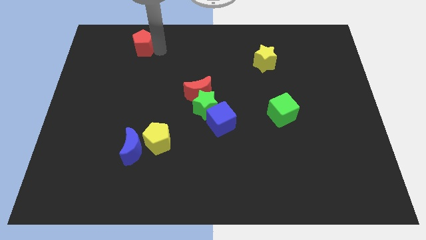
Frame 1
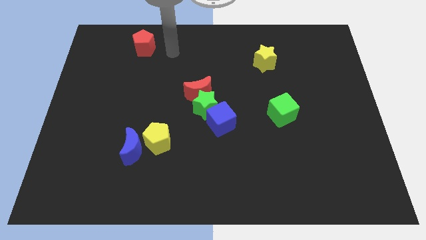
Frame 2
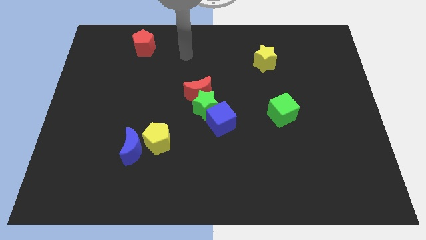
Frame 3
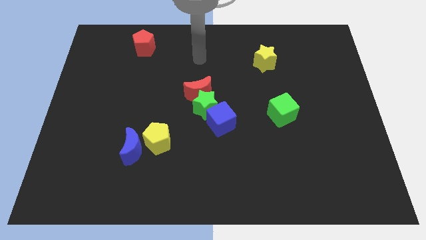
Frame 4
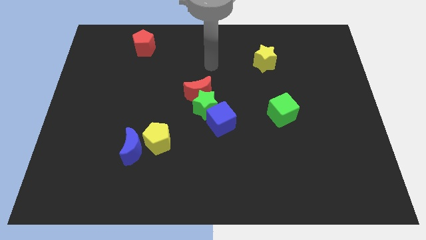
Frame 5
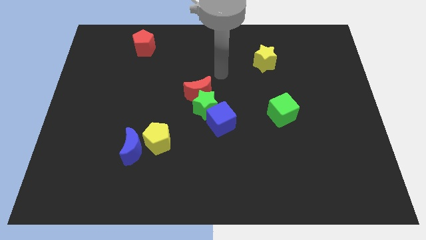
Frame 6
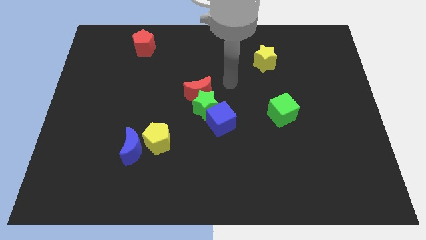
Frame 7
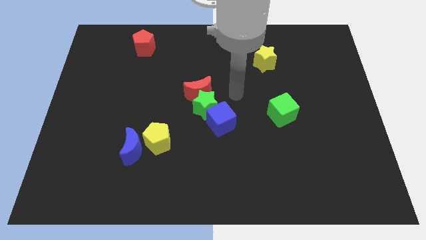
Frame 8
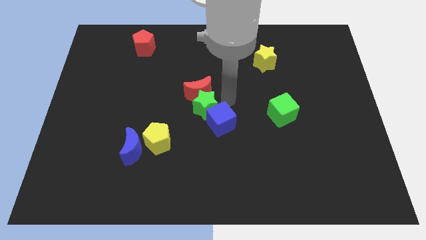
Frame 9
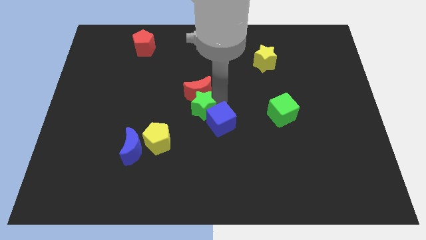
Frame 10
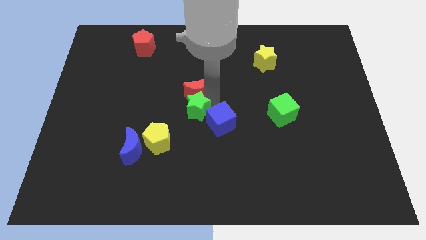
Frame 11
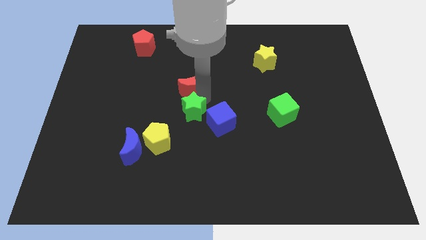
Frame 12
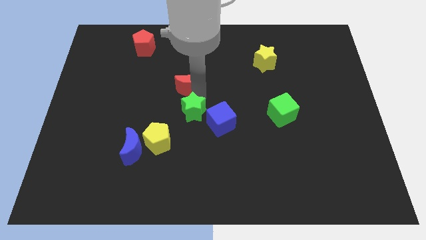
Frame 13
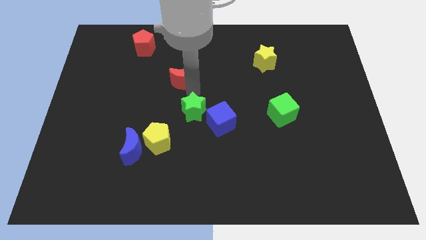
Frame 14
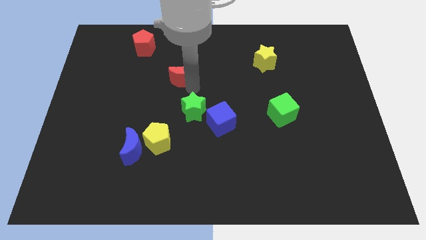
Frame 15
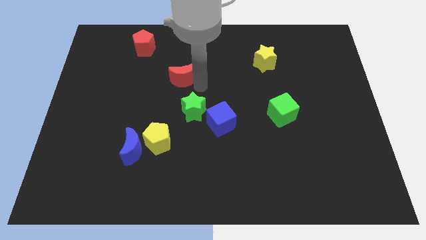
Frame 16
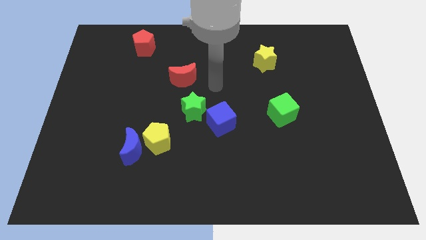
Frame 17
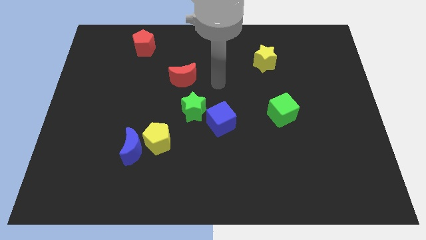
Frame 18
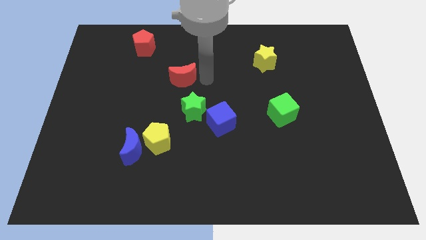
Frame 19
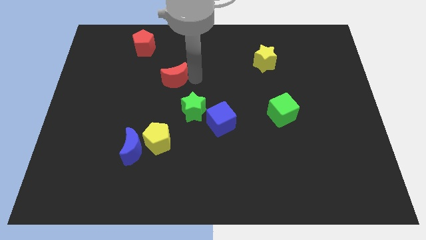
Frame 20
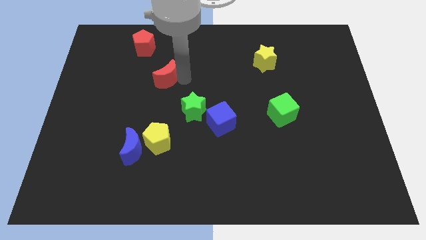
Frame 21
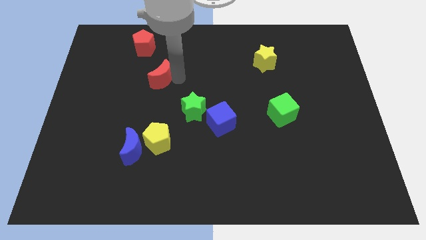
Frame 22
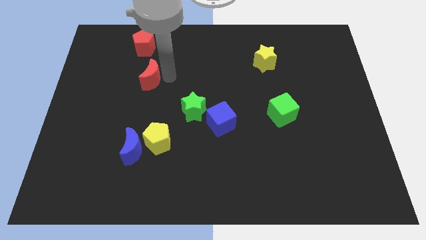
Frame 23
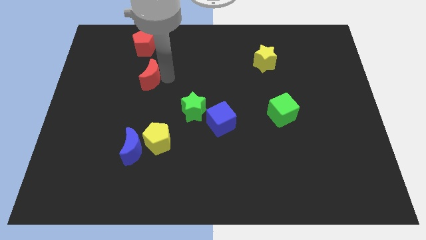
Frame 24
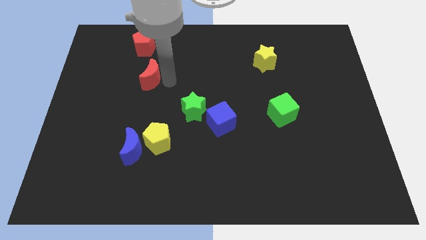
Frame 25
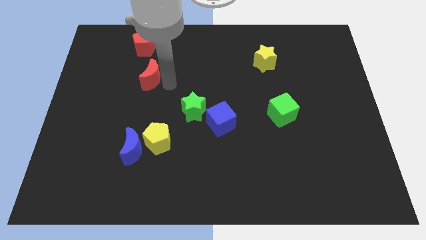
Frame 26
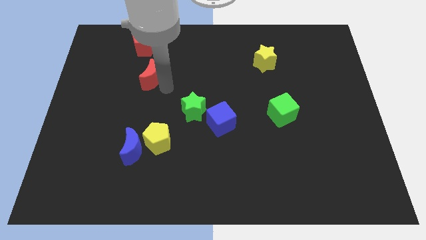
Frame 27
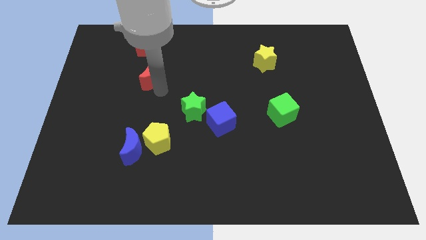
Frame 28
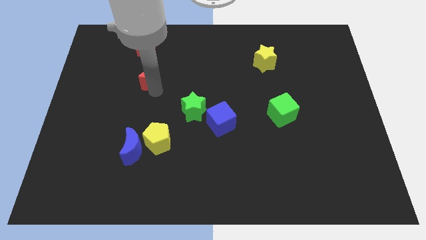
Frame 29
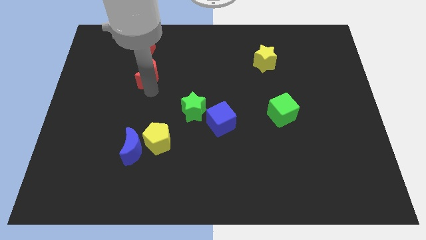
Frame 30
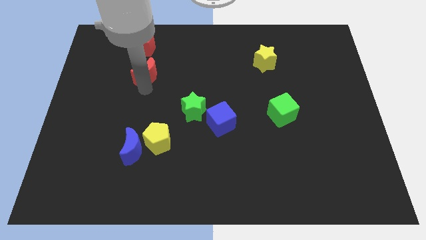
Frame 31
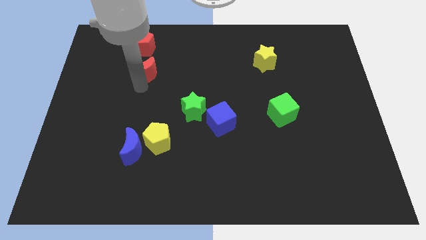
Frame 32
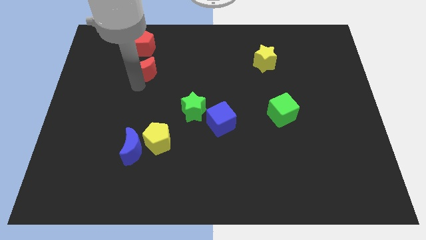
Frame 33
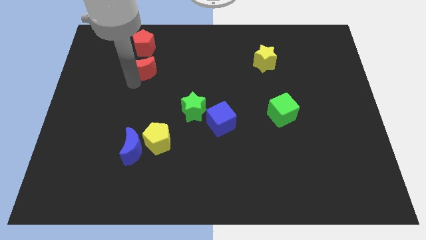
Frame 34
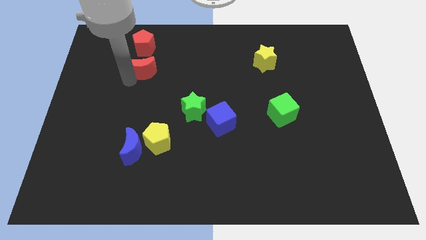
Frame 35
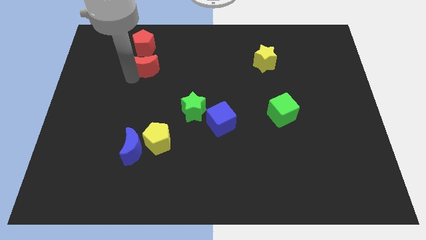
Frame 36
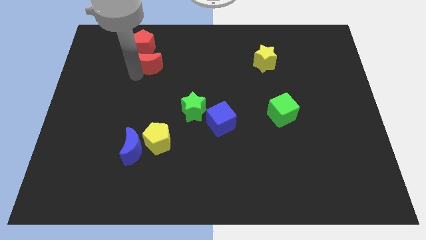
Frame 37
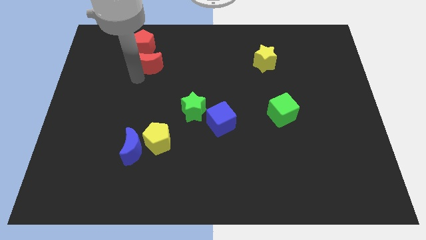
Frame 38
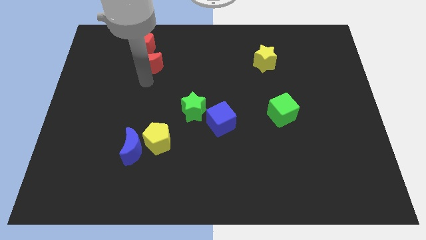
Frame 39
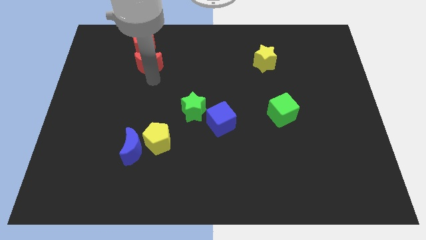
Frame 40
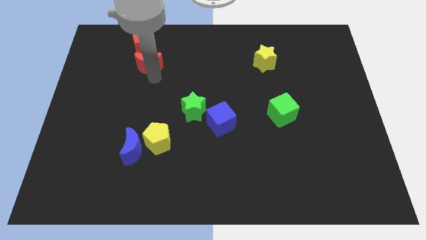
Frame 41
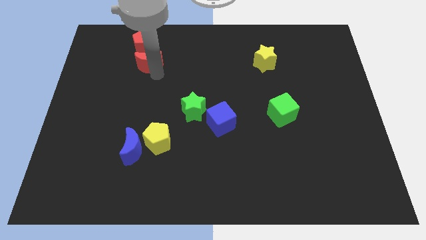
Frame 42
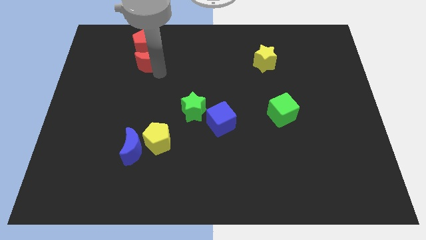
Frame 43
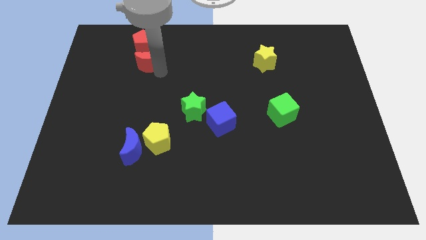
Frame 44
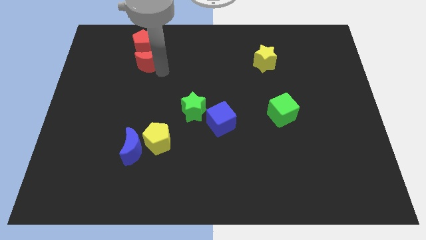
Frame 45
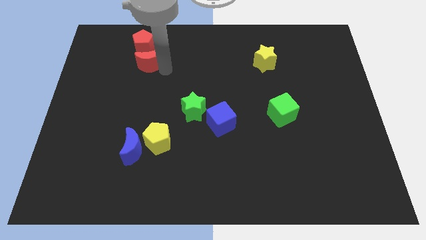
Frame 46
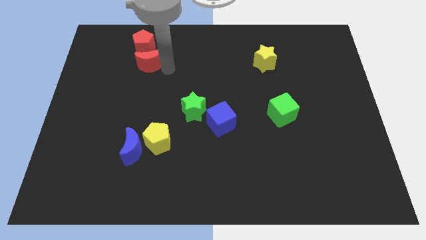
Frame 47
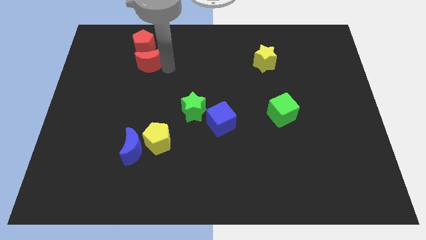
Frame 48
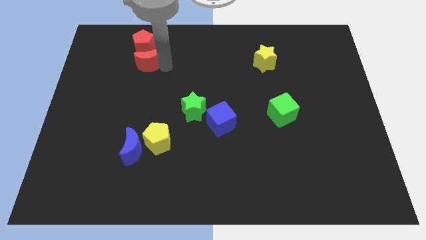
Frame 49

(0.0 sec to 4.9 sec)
place the red crescent under the red pentagon

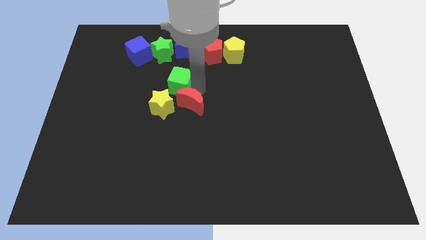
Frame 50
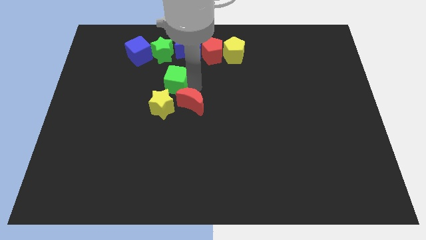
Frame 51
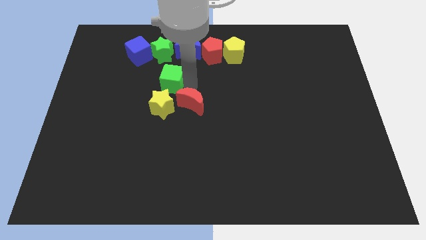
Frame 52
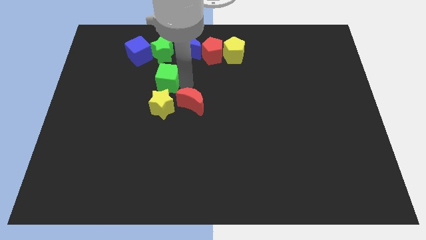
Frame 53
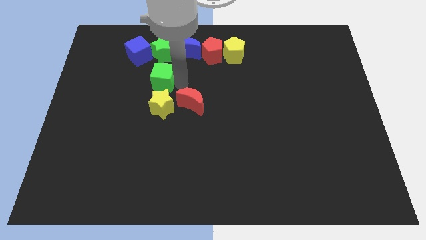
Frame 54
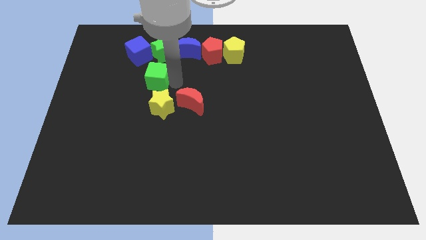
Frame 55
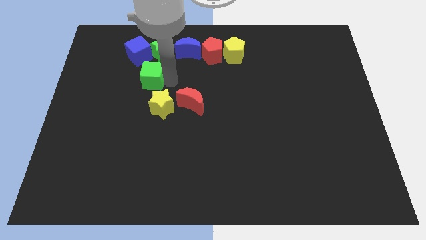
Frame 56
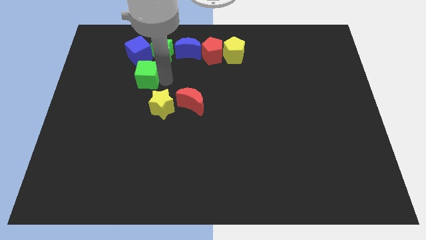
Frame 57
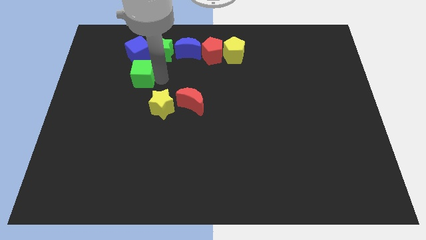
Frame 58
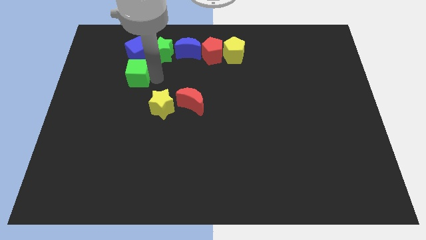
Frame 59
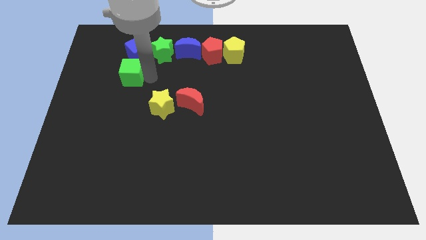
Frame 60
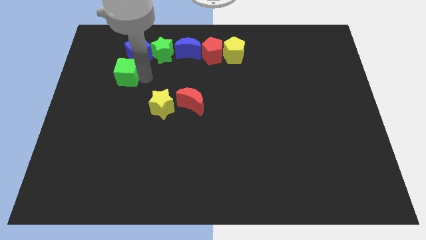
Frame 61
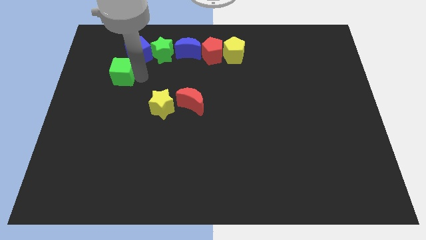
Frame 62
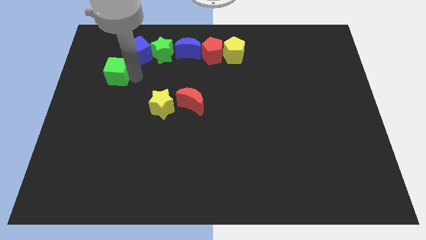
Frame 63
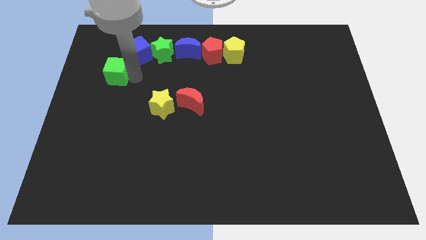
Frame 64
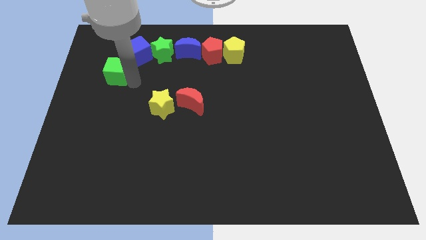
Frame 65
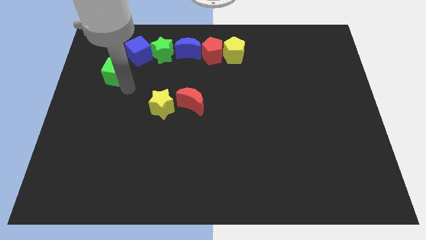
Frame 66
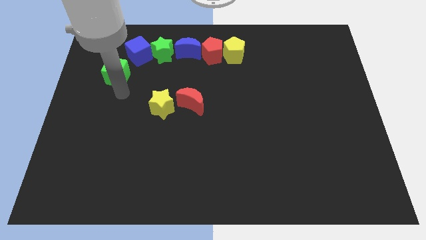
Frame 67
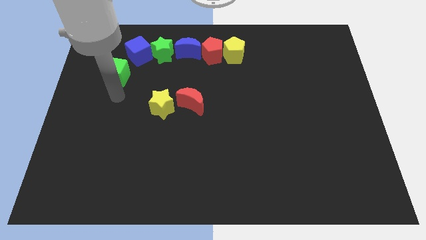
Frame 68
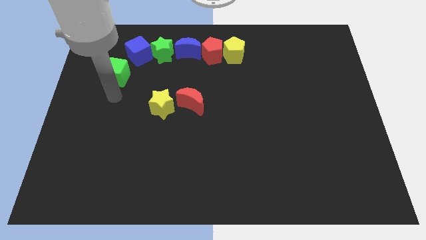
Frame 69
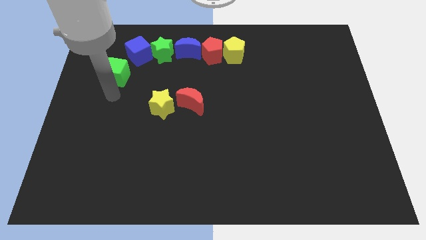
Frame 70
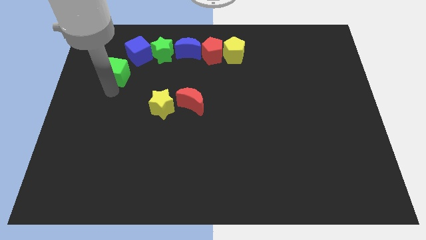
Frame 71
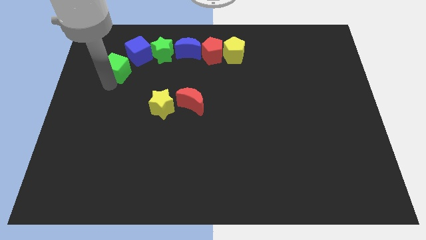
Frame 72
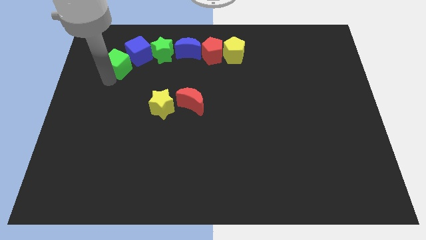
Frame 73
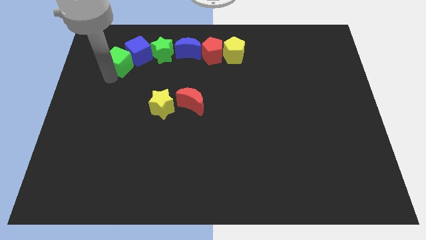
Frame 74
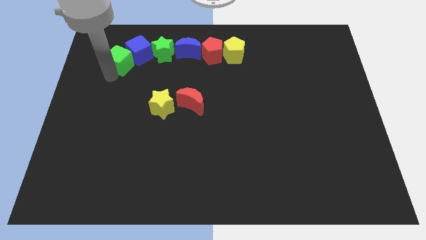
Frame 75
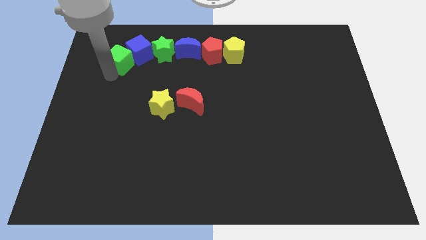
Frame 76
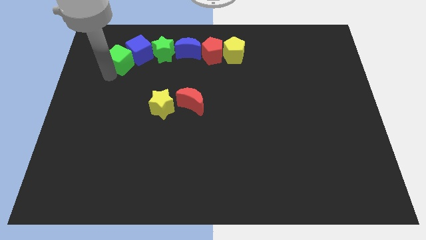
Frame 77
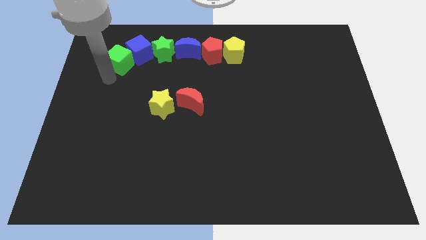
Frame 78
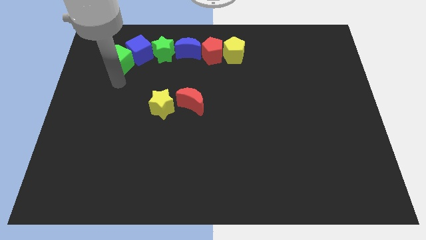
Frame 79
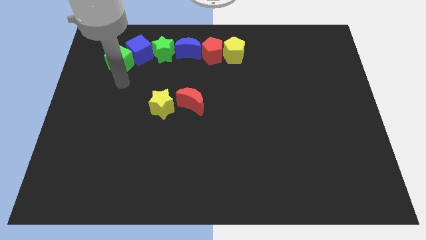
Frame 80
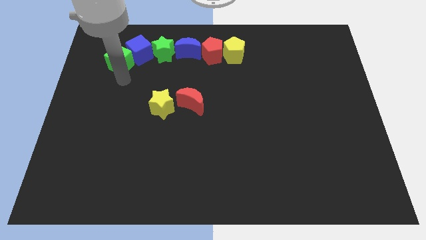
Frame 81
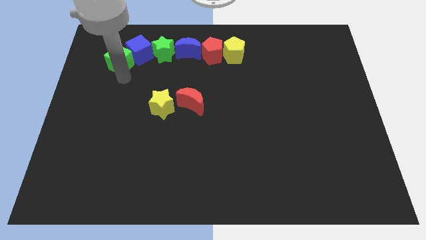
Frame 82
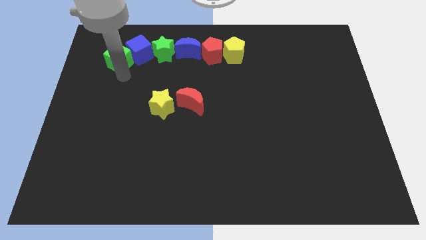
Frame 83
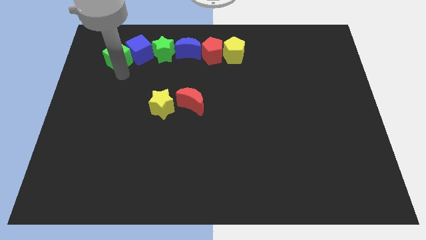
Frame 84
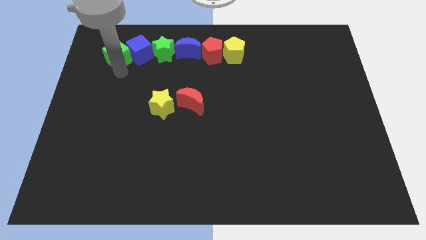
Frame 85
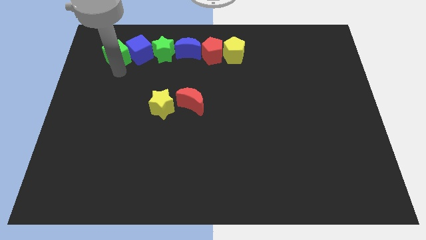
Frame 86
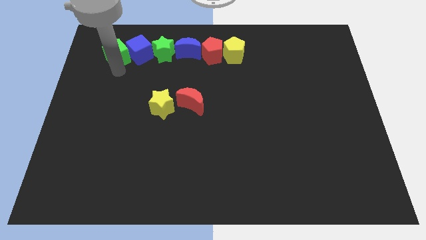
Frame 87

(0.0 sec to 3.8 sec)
move green cube to the left of blue cube
